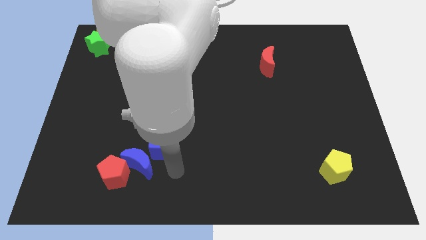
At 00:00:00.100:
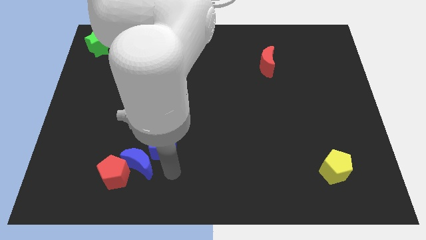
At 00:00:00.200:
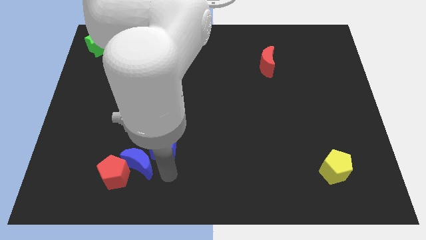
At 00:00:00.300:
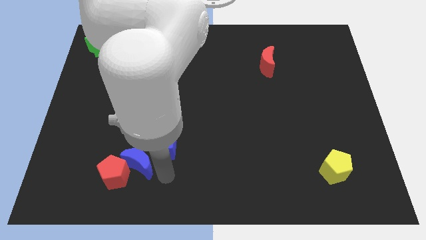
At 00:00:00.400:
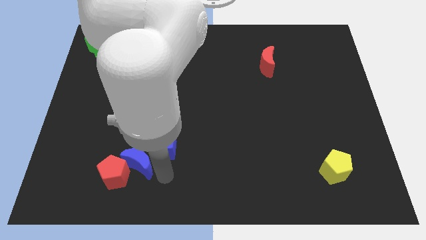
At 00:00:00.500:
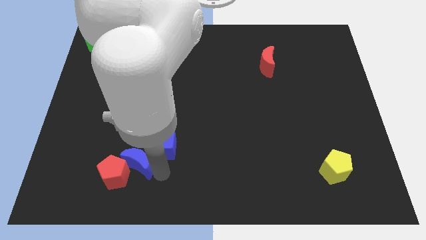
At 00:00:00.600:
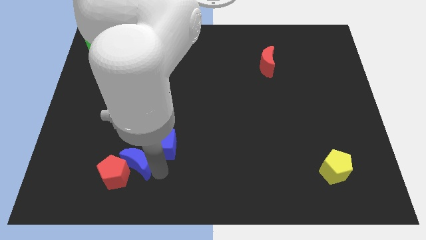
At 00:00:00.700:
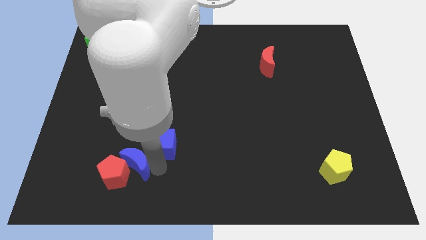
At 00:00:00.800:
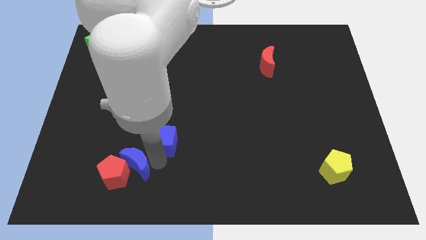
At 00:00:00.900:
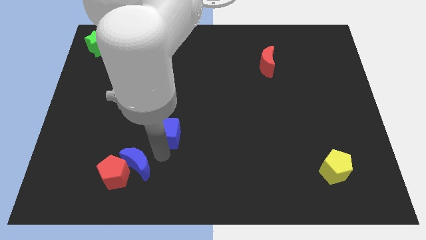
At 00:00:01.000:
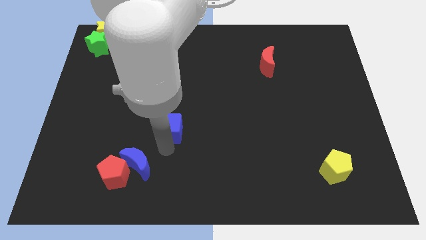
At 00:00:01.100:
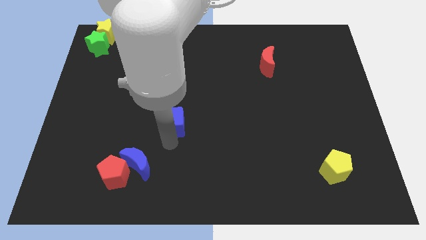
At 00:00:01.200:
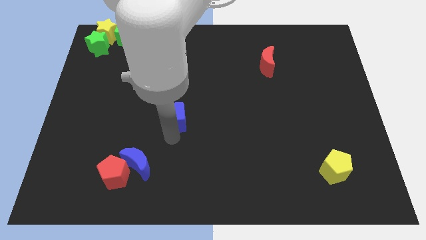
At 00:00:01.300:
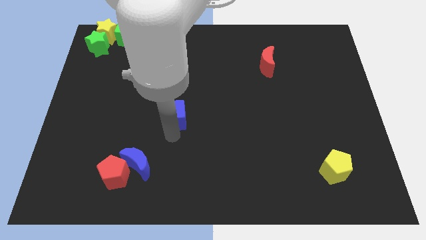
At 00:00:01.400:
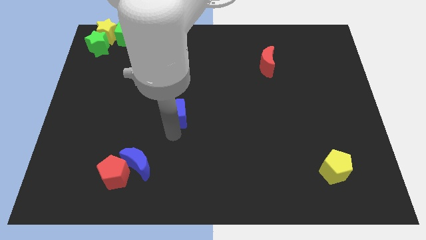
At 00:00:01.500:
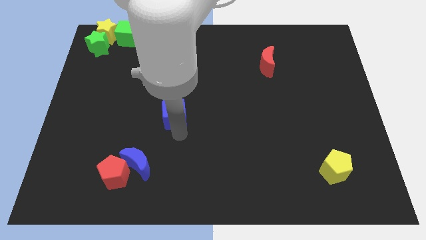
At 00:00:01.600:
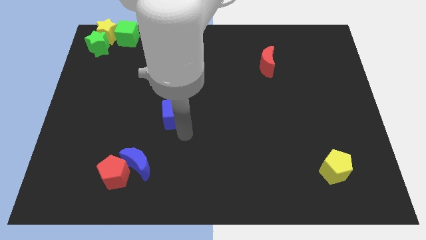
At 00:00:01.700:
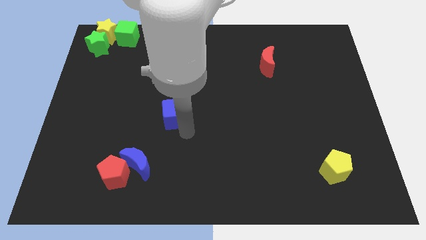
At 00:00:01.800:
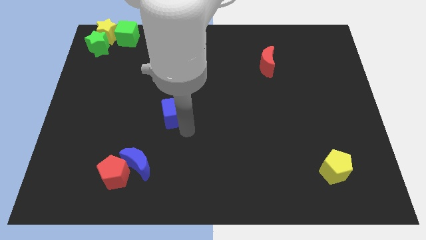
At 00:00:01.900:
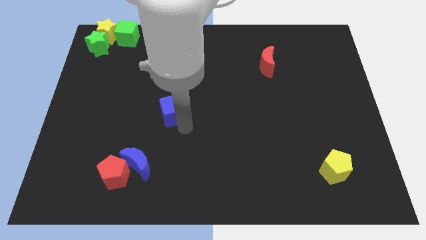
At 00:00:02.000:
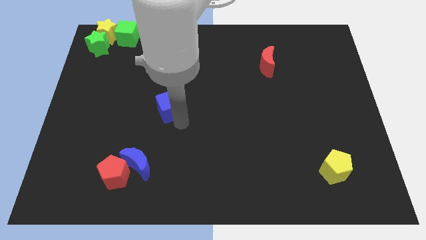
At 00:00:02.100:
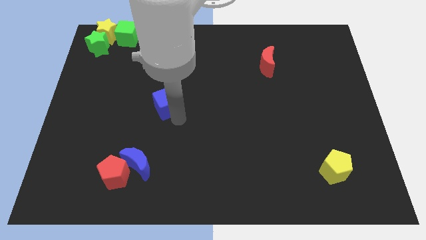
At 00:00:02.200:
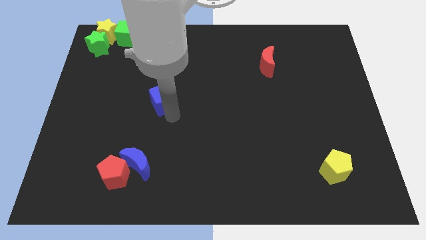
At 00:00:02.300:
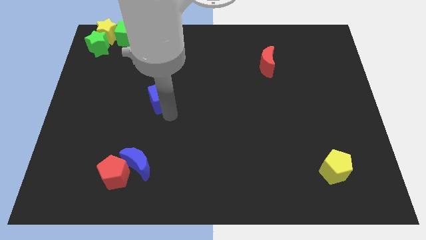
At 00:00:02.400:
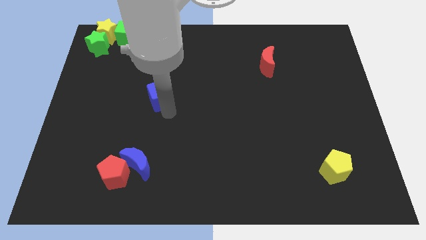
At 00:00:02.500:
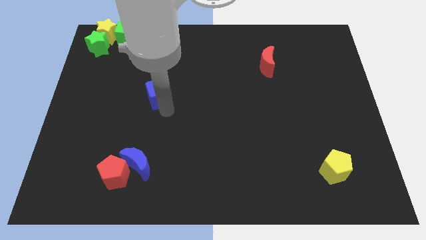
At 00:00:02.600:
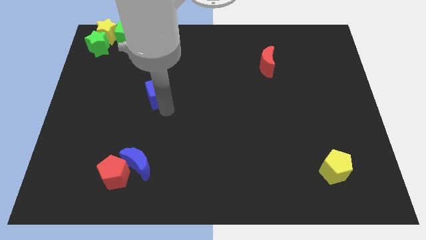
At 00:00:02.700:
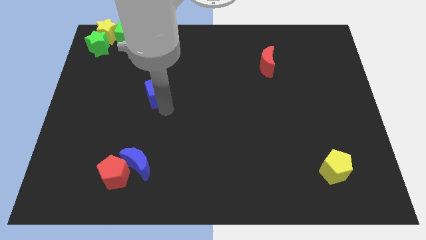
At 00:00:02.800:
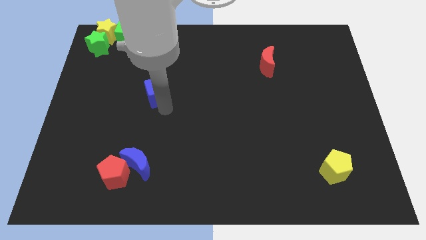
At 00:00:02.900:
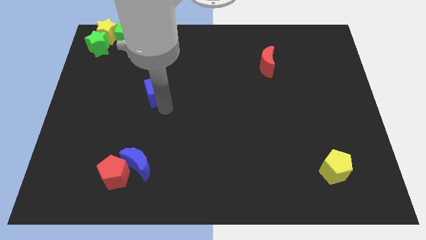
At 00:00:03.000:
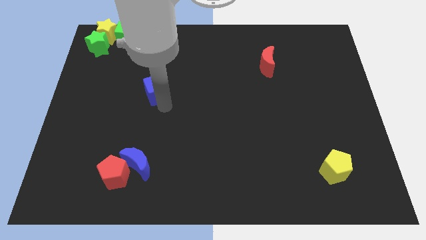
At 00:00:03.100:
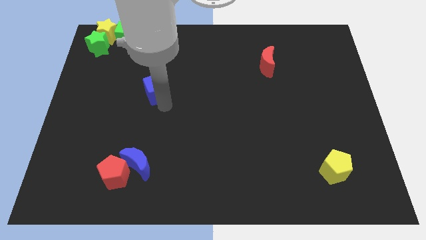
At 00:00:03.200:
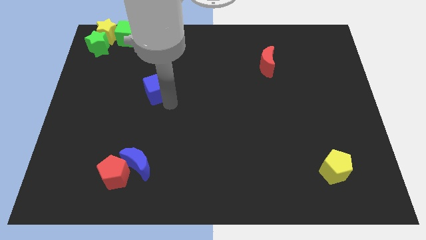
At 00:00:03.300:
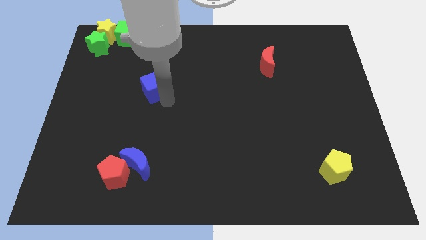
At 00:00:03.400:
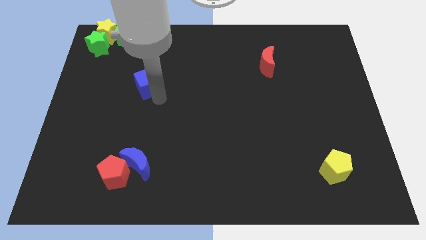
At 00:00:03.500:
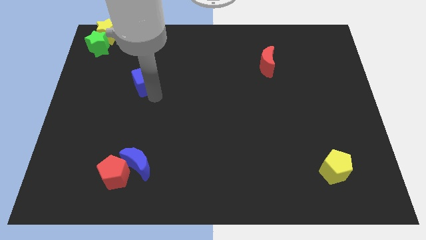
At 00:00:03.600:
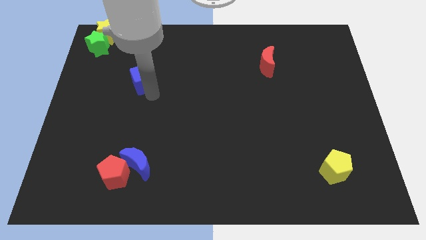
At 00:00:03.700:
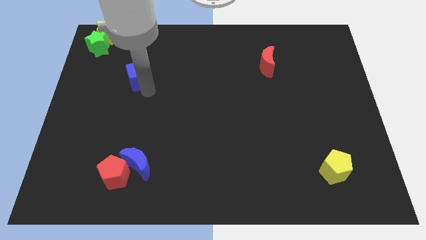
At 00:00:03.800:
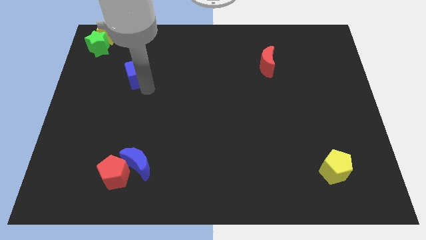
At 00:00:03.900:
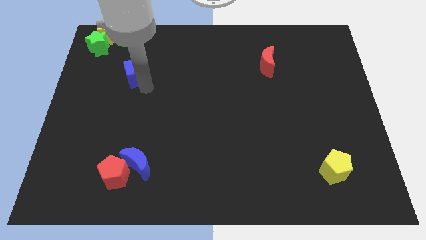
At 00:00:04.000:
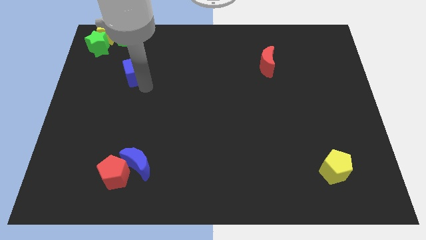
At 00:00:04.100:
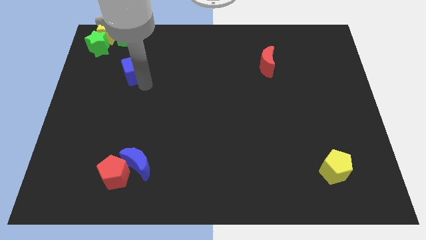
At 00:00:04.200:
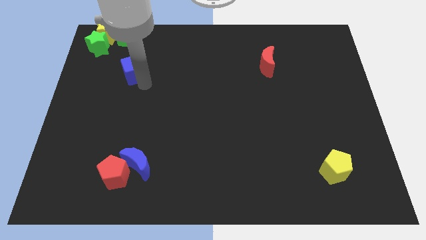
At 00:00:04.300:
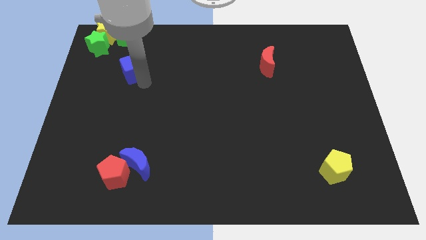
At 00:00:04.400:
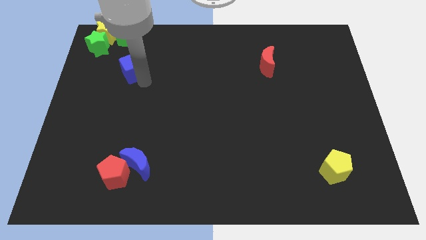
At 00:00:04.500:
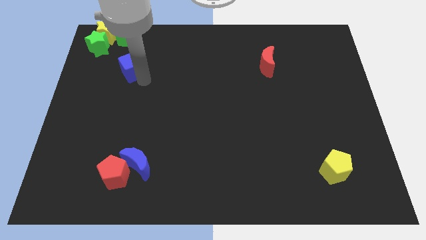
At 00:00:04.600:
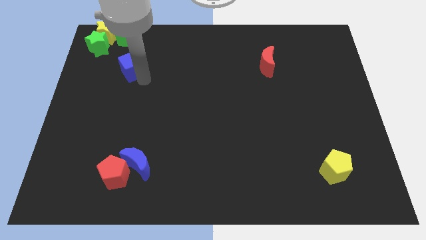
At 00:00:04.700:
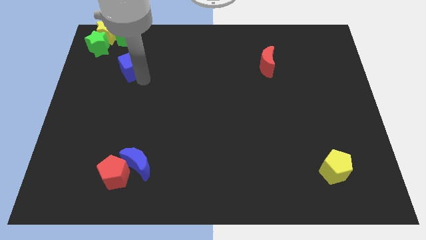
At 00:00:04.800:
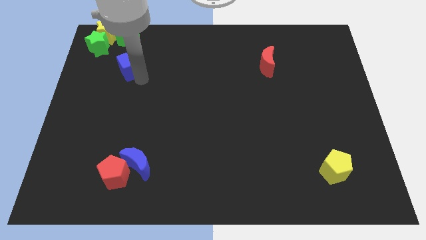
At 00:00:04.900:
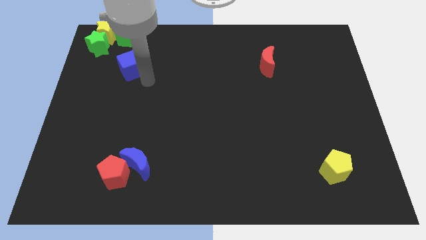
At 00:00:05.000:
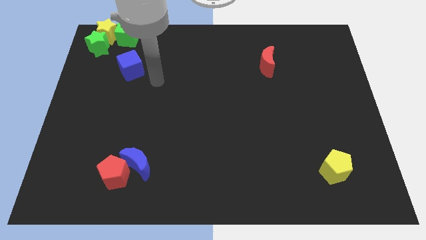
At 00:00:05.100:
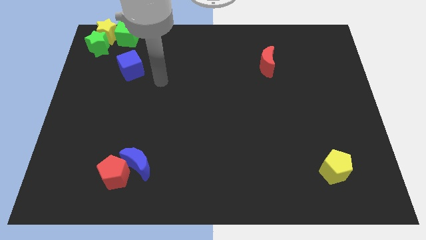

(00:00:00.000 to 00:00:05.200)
place the blue cube to the bottom of the green cube

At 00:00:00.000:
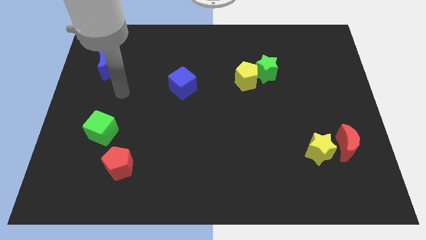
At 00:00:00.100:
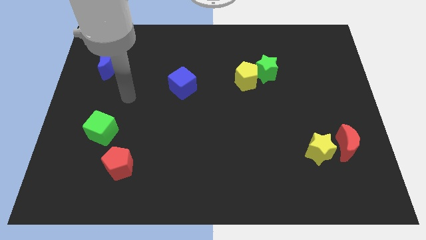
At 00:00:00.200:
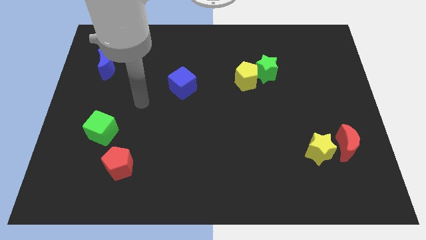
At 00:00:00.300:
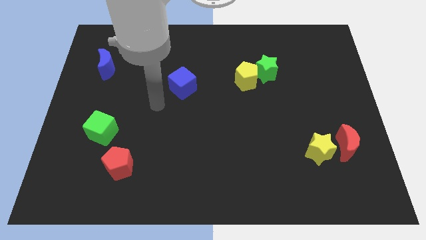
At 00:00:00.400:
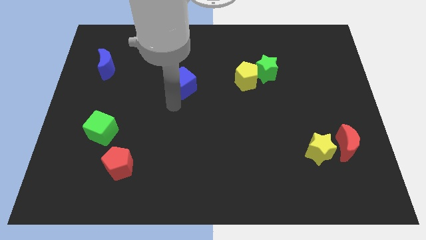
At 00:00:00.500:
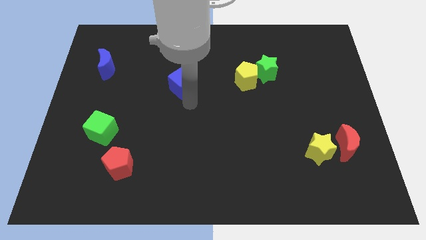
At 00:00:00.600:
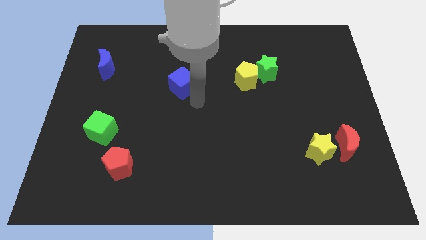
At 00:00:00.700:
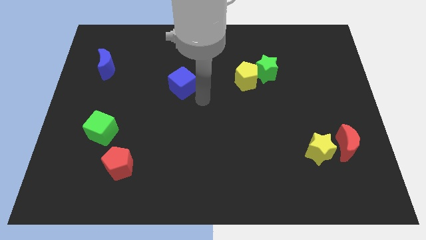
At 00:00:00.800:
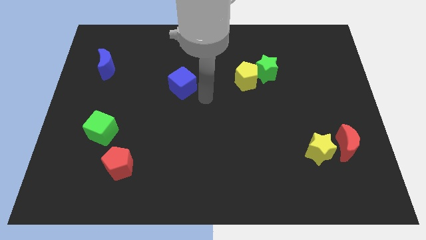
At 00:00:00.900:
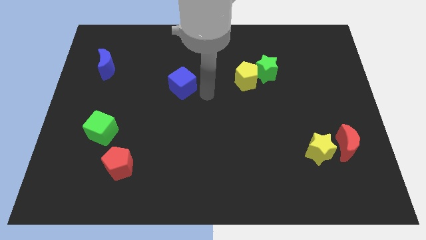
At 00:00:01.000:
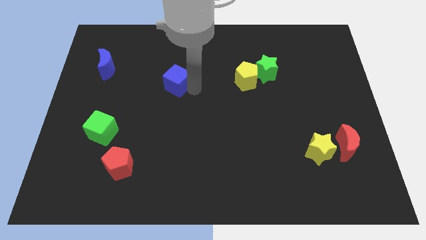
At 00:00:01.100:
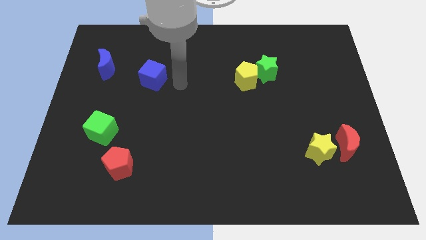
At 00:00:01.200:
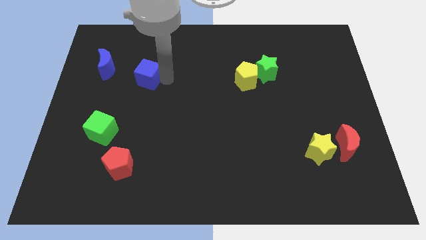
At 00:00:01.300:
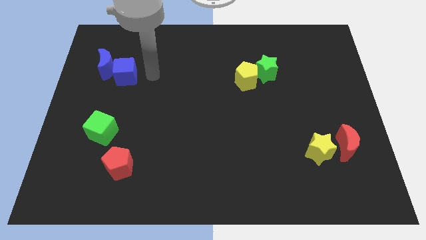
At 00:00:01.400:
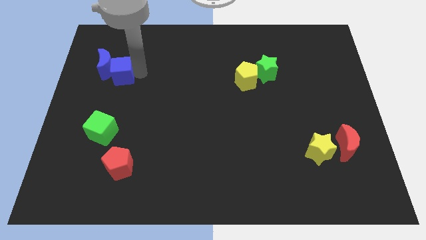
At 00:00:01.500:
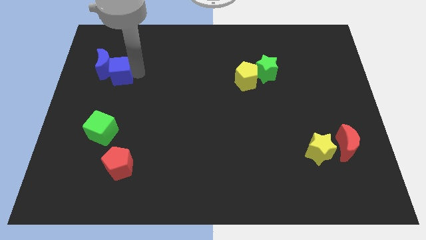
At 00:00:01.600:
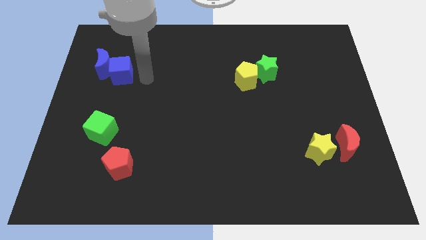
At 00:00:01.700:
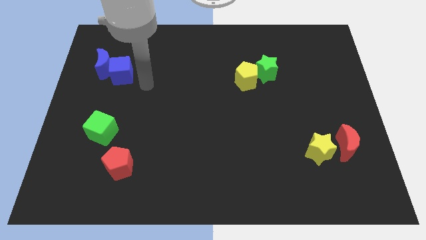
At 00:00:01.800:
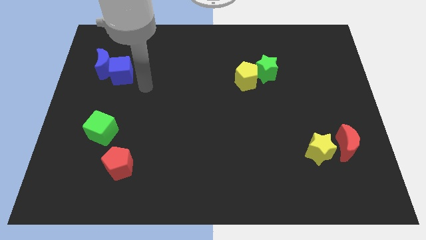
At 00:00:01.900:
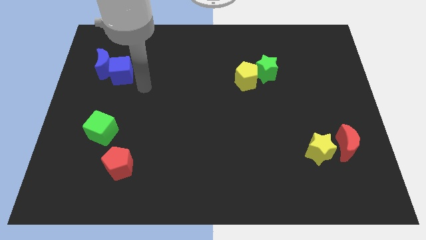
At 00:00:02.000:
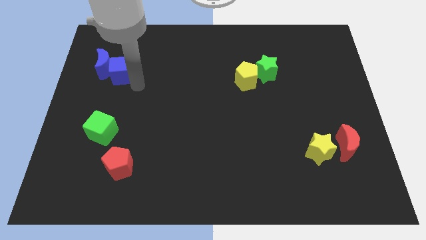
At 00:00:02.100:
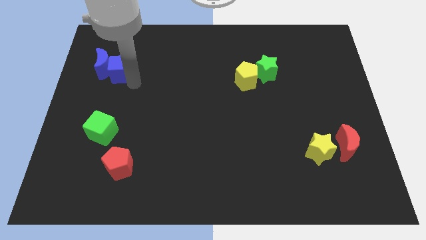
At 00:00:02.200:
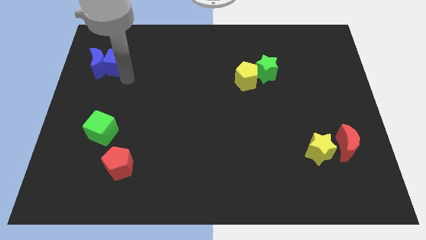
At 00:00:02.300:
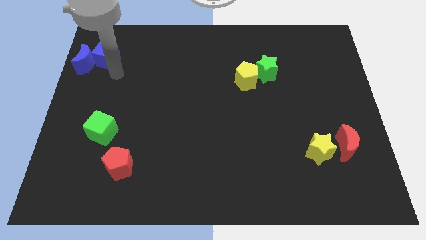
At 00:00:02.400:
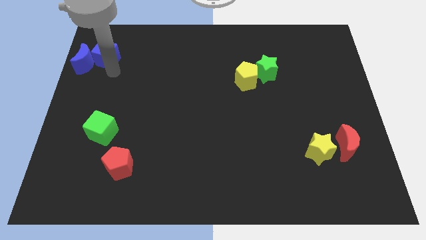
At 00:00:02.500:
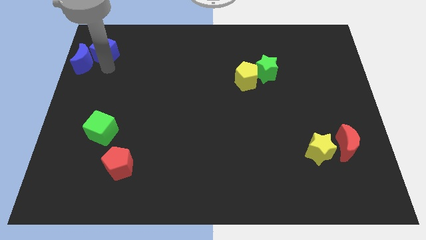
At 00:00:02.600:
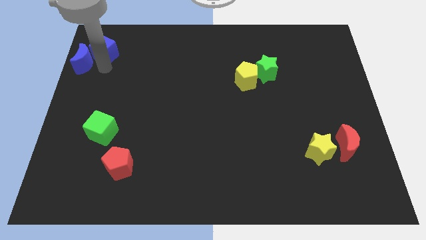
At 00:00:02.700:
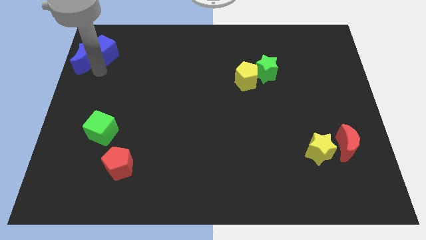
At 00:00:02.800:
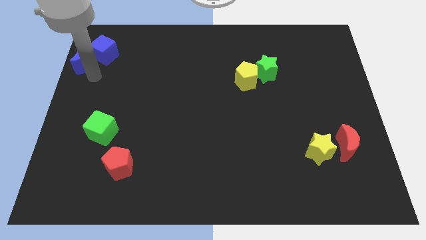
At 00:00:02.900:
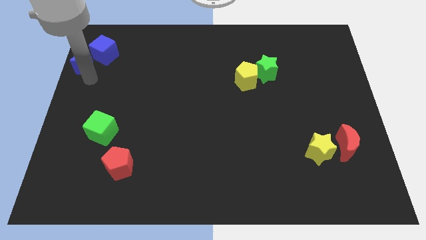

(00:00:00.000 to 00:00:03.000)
move the blue blocks to the top left

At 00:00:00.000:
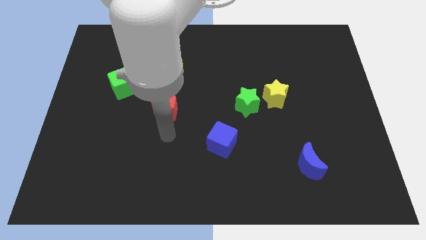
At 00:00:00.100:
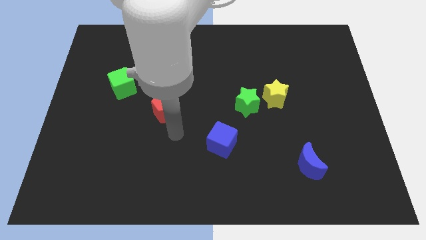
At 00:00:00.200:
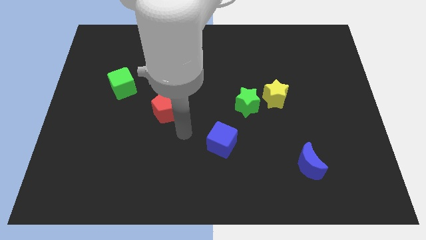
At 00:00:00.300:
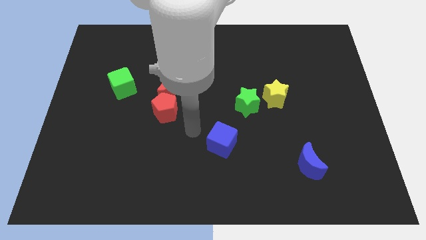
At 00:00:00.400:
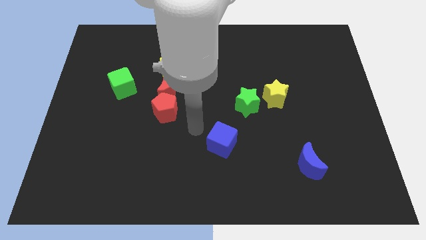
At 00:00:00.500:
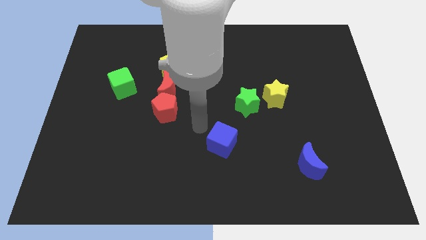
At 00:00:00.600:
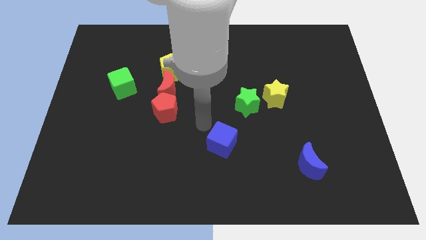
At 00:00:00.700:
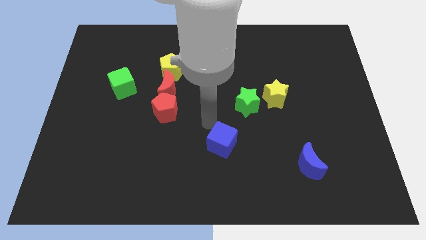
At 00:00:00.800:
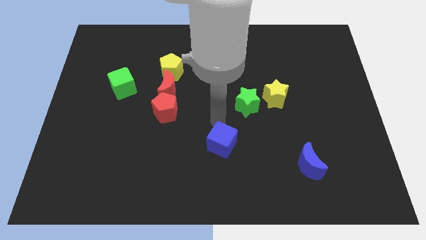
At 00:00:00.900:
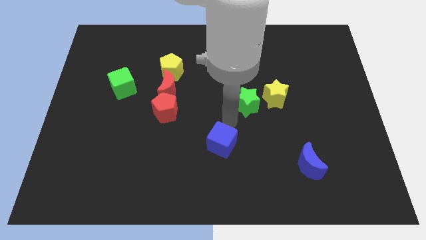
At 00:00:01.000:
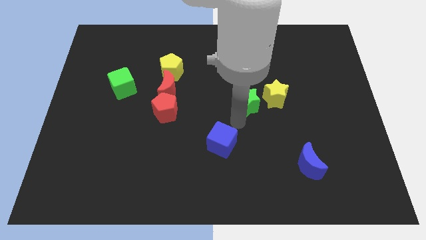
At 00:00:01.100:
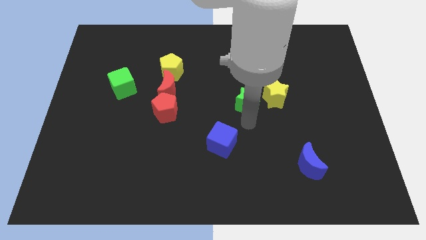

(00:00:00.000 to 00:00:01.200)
move the arm away from the red pentagon
